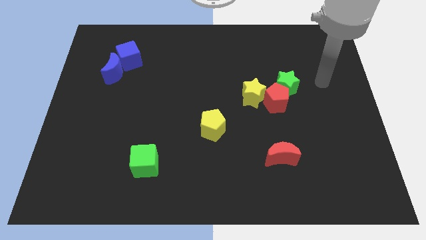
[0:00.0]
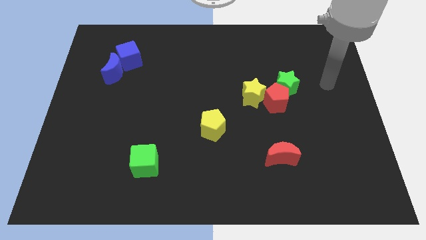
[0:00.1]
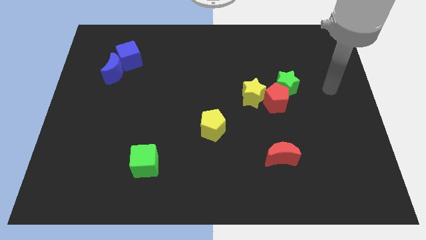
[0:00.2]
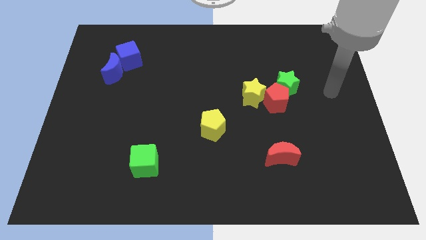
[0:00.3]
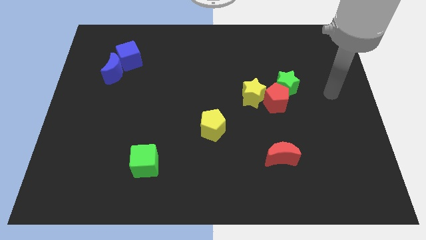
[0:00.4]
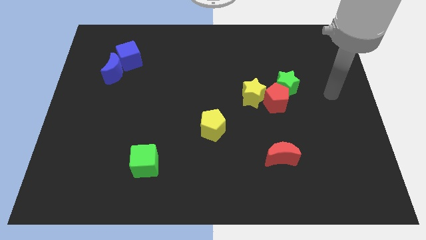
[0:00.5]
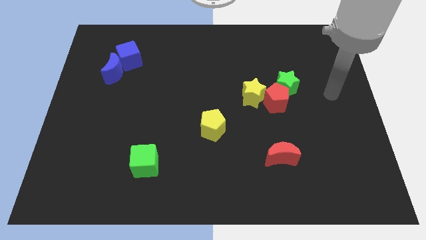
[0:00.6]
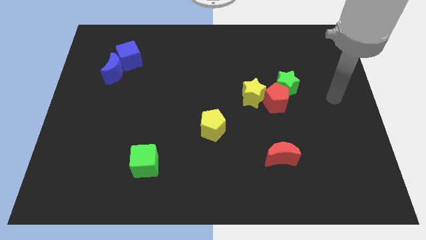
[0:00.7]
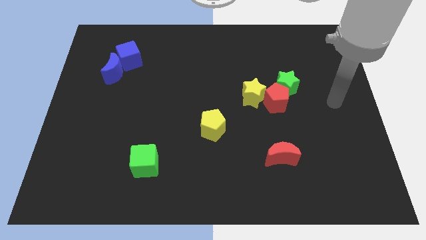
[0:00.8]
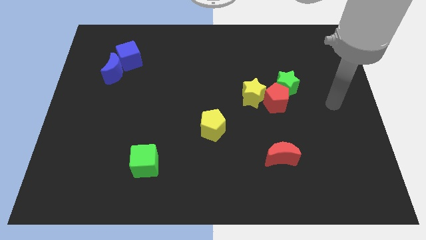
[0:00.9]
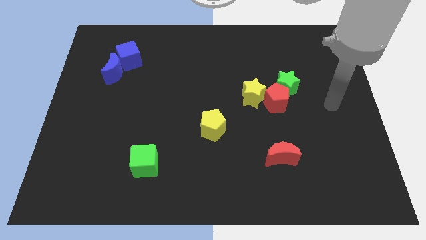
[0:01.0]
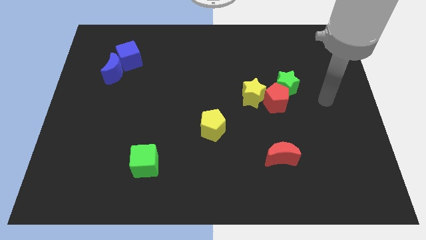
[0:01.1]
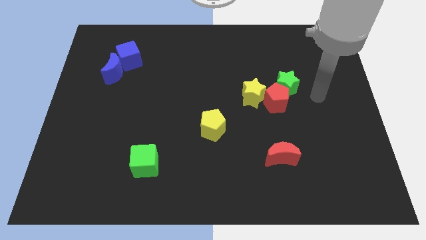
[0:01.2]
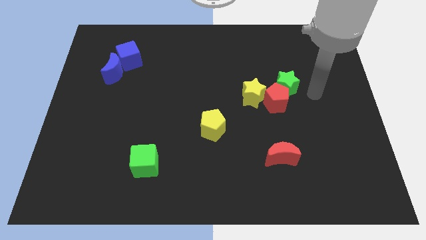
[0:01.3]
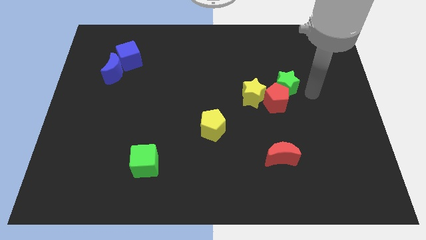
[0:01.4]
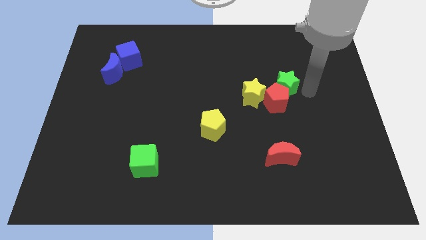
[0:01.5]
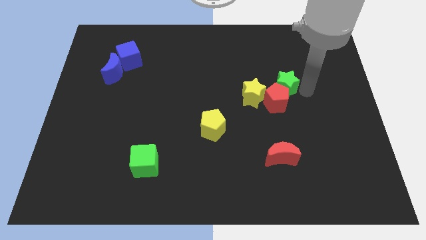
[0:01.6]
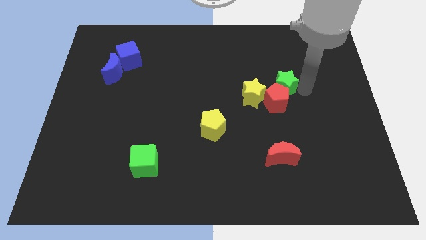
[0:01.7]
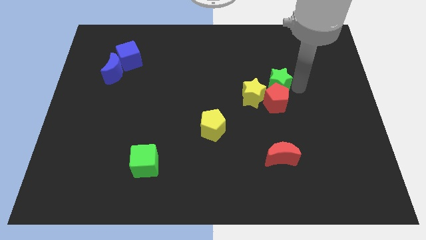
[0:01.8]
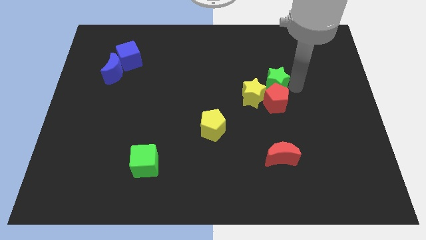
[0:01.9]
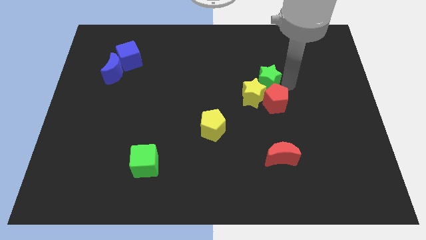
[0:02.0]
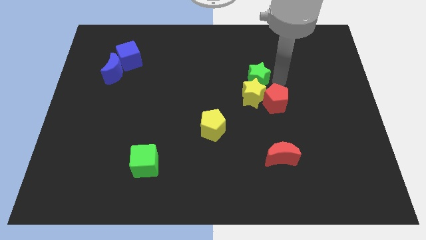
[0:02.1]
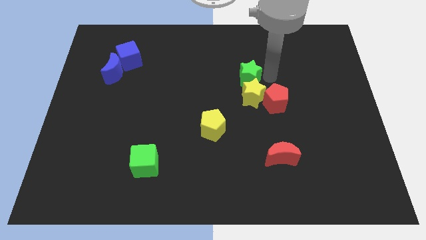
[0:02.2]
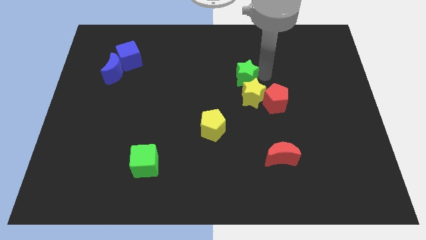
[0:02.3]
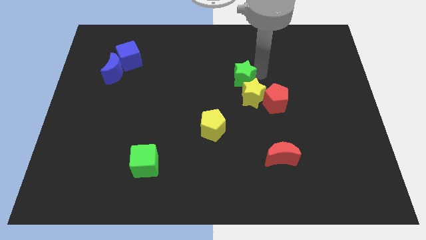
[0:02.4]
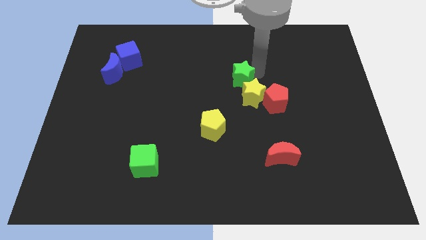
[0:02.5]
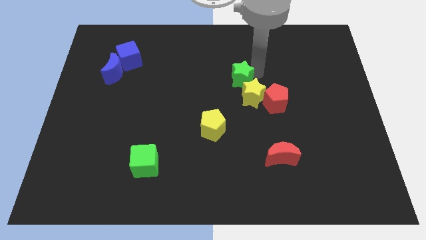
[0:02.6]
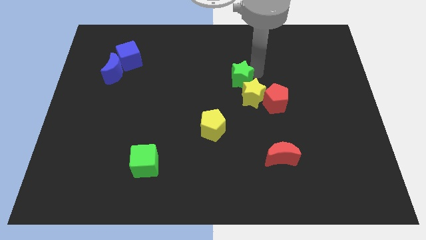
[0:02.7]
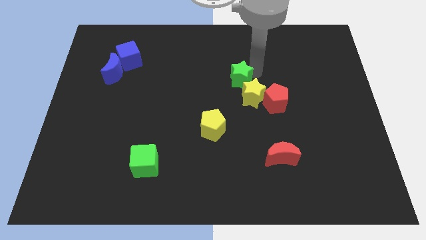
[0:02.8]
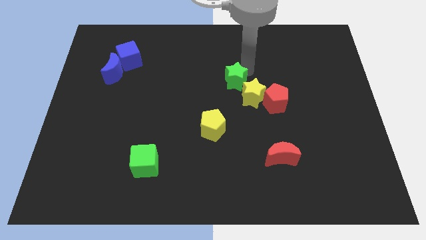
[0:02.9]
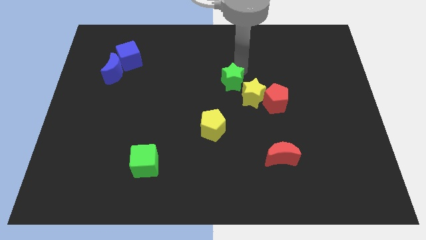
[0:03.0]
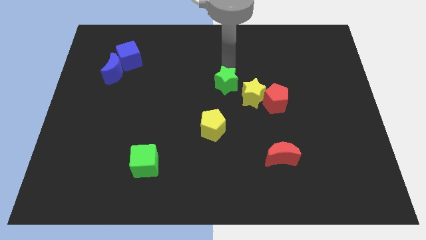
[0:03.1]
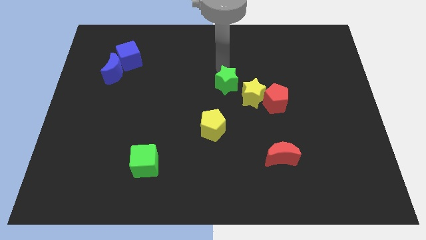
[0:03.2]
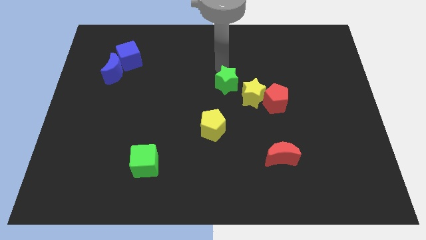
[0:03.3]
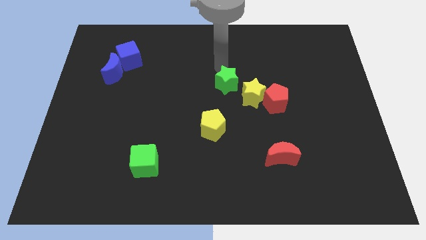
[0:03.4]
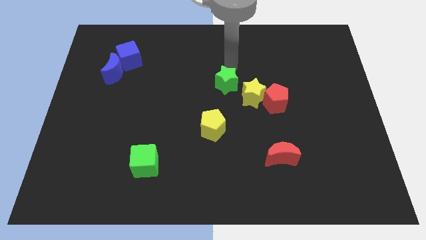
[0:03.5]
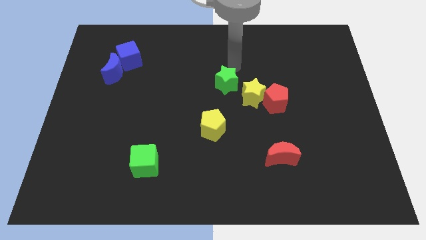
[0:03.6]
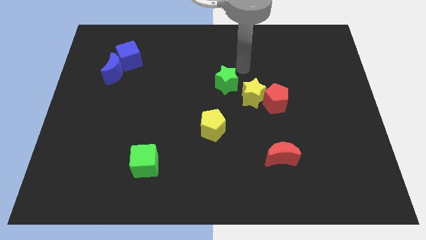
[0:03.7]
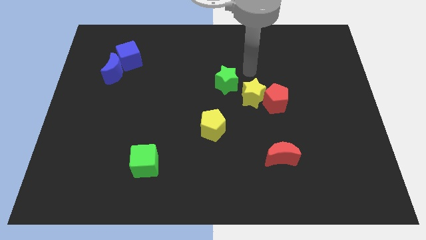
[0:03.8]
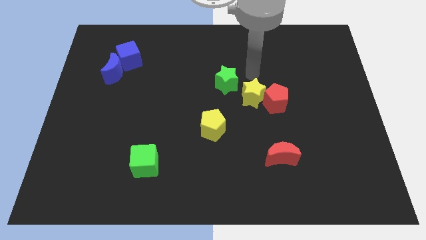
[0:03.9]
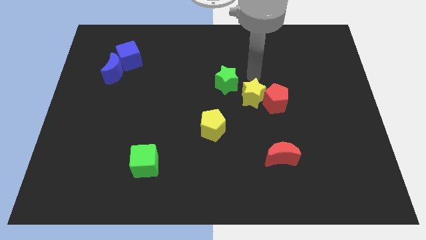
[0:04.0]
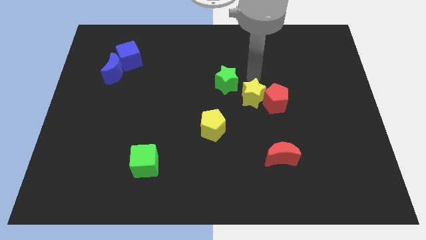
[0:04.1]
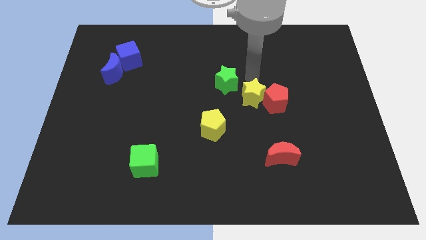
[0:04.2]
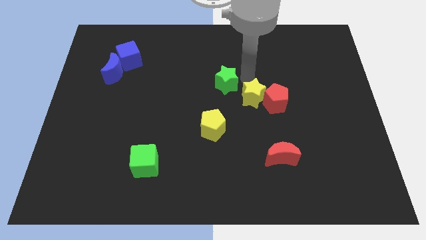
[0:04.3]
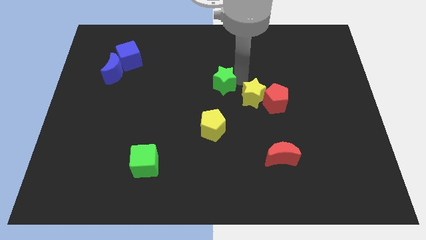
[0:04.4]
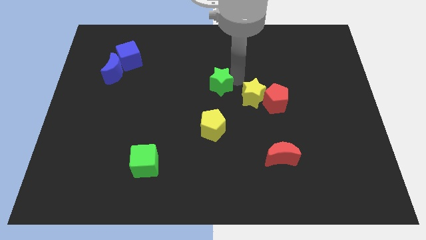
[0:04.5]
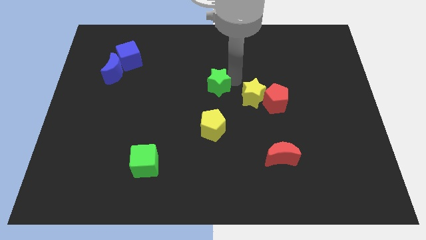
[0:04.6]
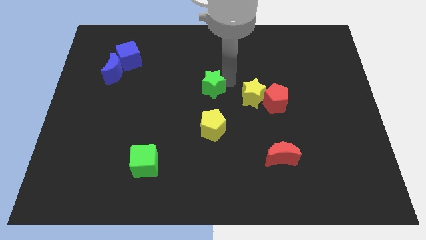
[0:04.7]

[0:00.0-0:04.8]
move green star to the top of the yellow pentagon

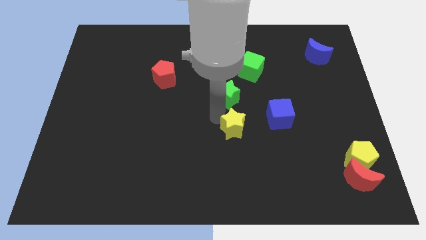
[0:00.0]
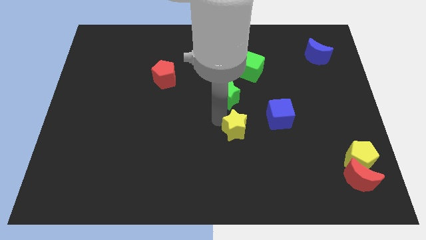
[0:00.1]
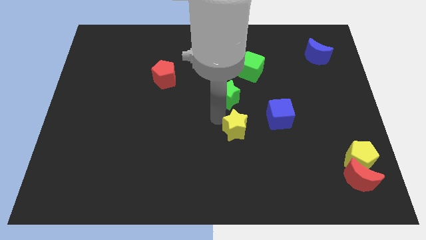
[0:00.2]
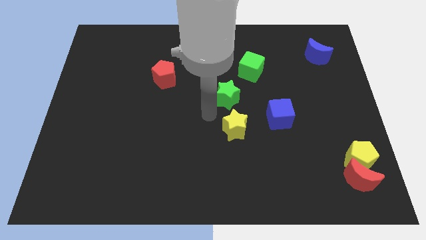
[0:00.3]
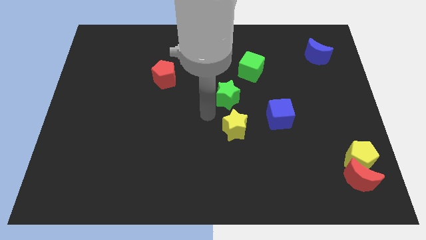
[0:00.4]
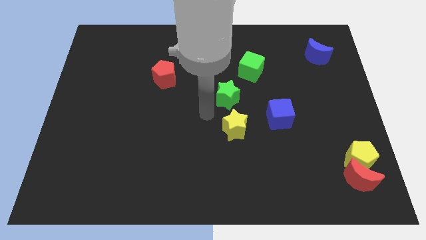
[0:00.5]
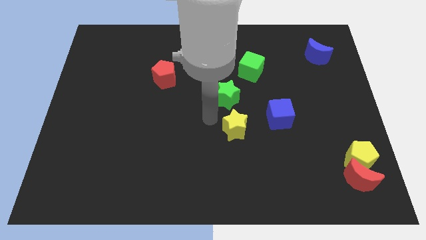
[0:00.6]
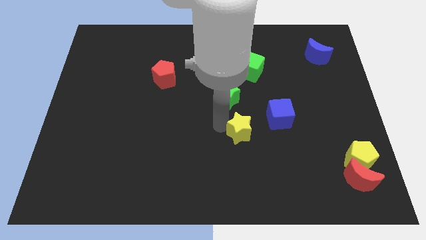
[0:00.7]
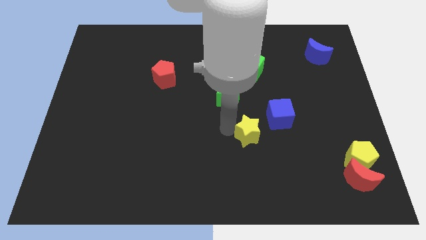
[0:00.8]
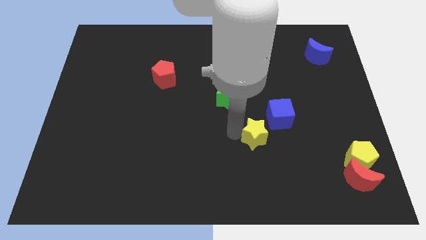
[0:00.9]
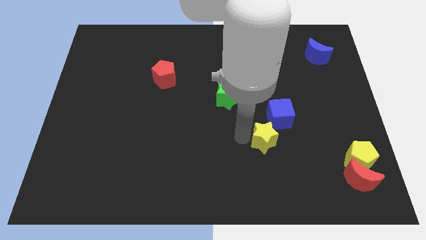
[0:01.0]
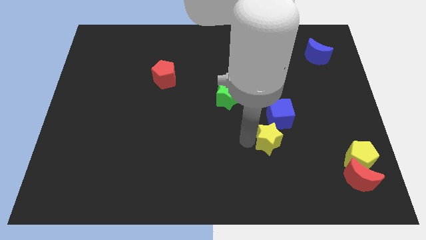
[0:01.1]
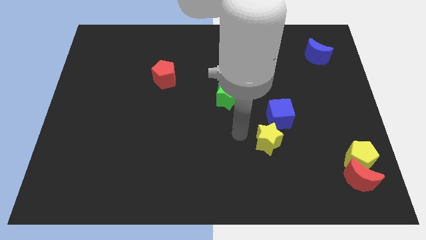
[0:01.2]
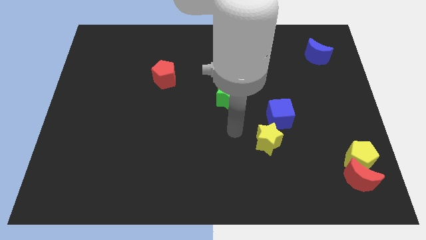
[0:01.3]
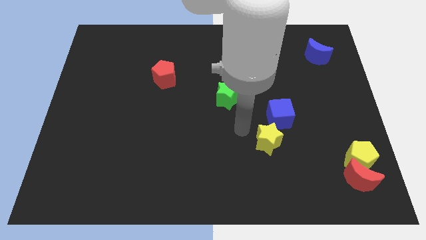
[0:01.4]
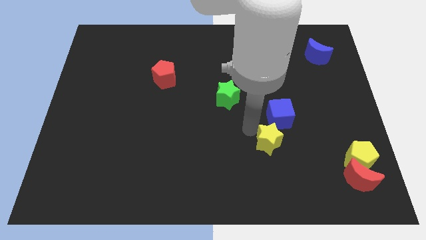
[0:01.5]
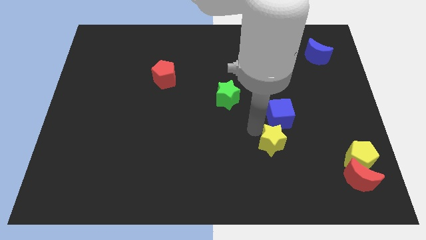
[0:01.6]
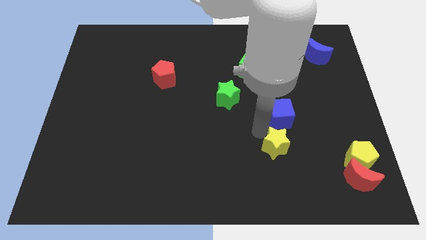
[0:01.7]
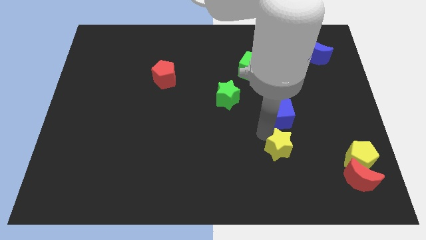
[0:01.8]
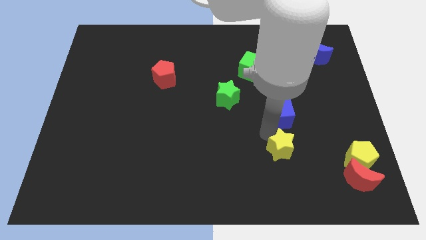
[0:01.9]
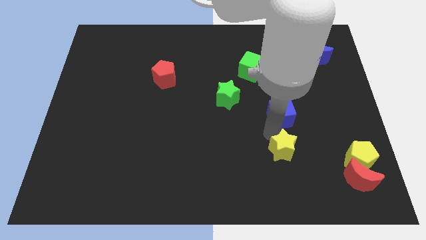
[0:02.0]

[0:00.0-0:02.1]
push the yellow star to the bottom of the blue cube

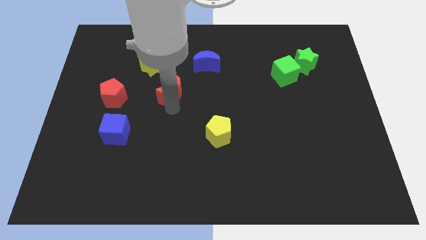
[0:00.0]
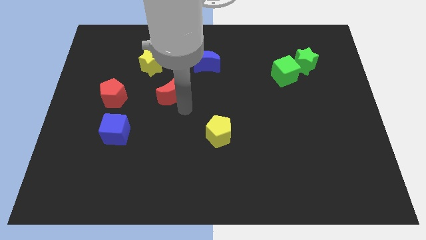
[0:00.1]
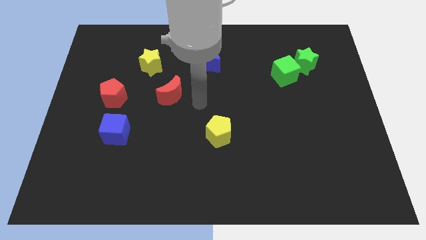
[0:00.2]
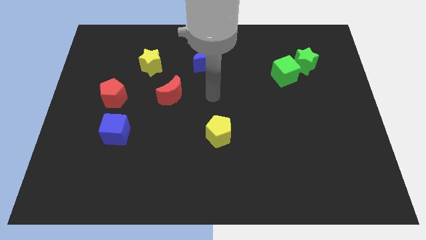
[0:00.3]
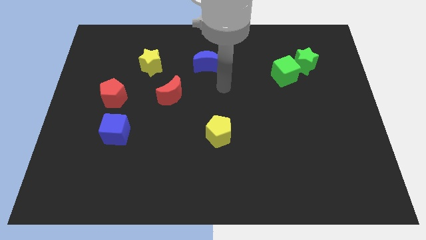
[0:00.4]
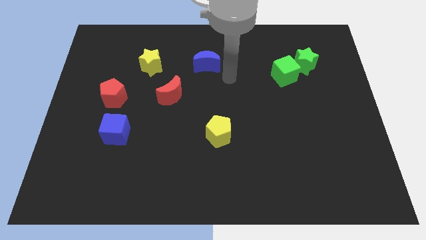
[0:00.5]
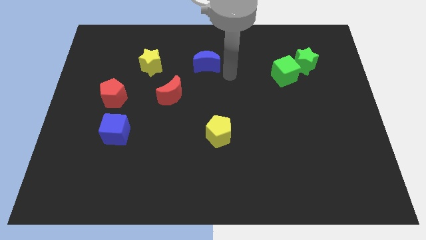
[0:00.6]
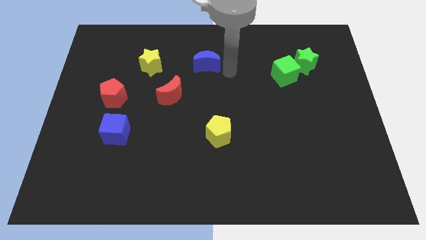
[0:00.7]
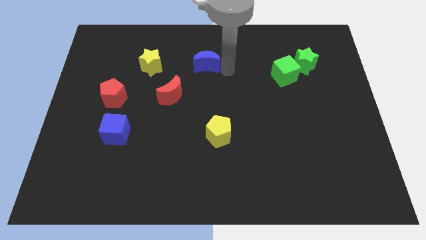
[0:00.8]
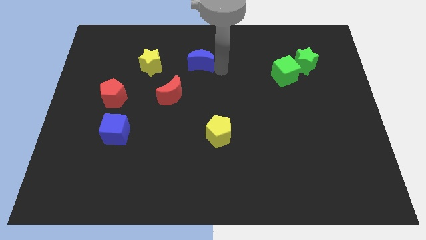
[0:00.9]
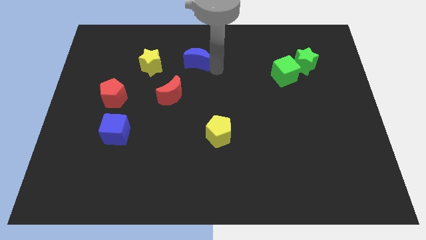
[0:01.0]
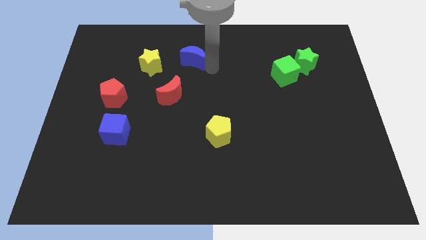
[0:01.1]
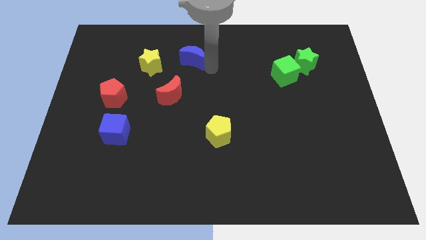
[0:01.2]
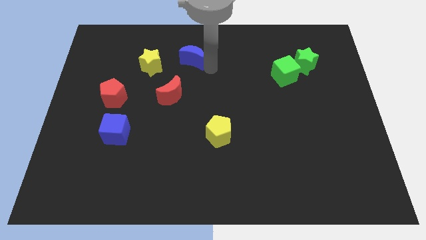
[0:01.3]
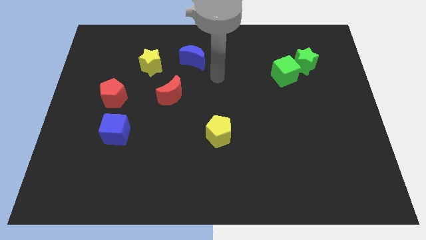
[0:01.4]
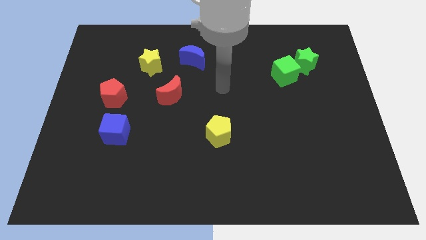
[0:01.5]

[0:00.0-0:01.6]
push the blue moon to the left side slightly

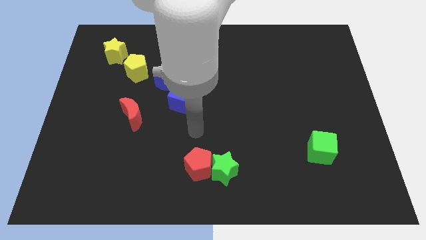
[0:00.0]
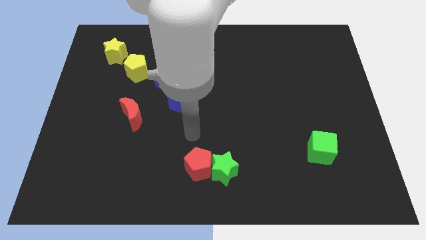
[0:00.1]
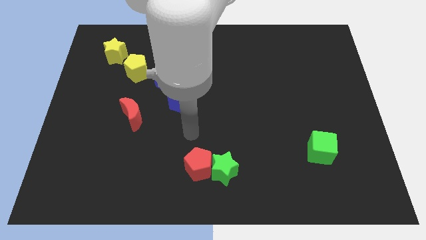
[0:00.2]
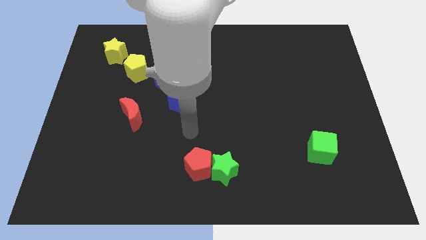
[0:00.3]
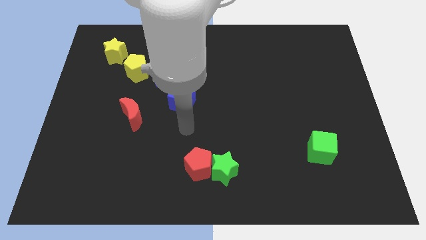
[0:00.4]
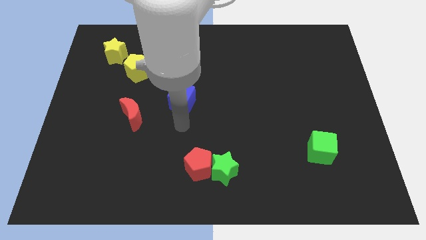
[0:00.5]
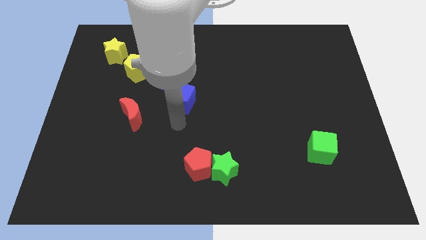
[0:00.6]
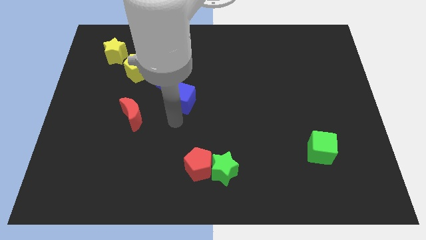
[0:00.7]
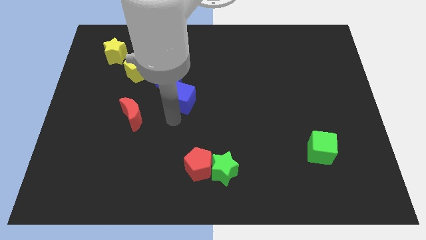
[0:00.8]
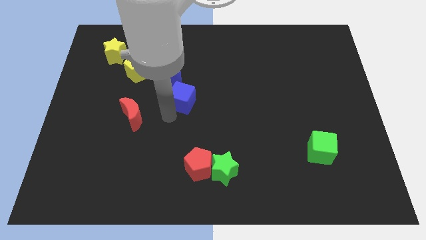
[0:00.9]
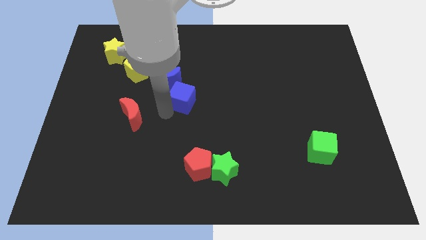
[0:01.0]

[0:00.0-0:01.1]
move the arm to the bottom of the blue cube
